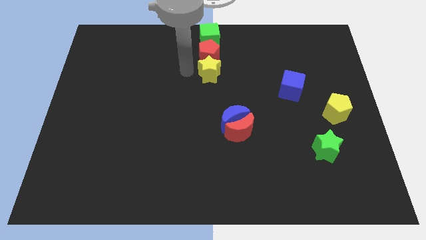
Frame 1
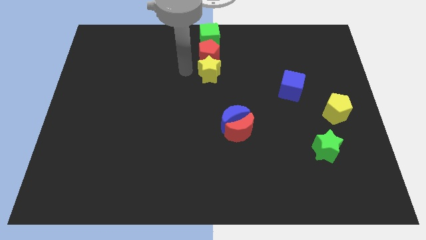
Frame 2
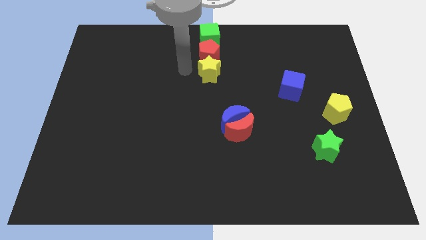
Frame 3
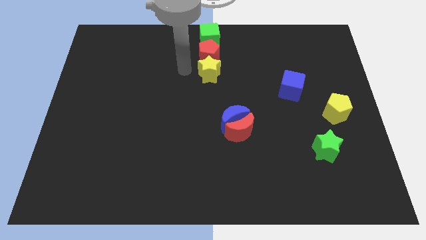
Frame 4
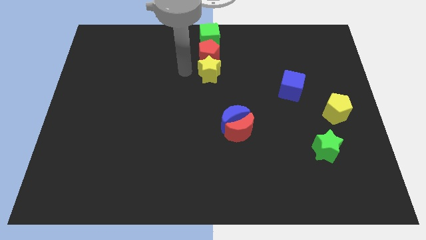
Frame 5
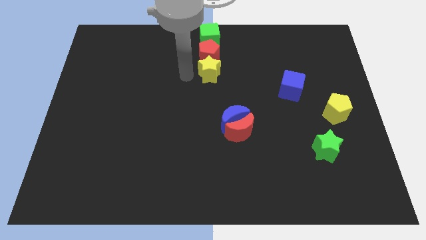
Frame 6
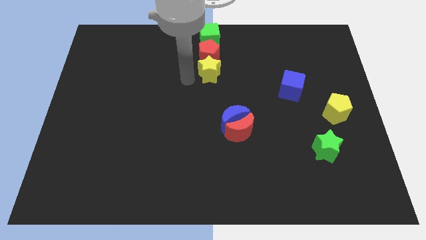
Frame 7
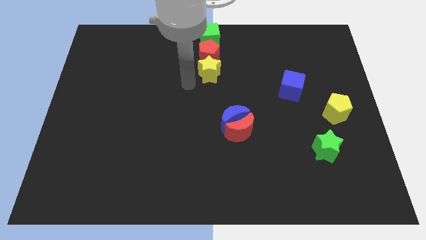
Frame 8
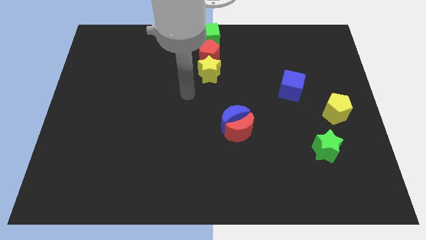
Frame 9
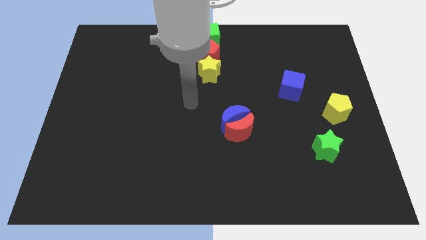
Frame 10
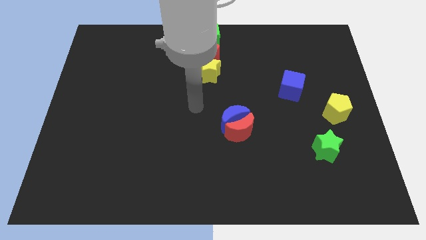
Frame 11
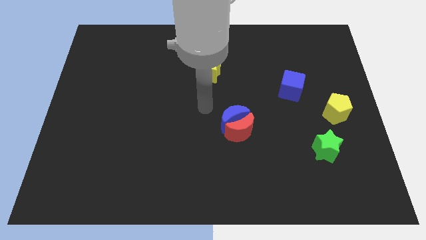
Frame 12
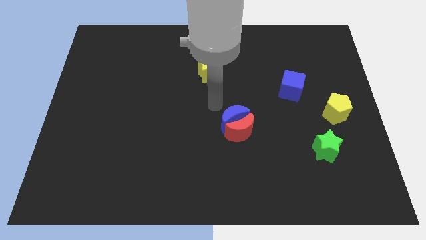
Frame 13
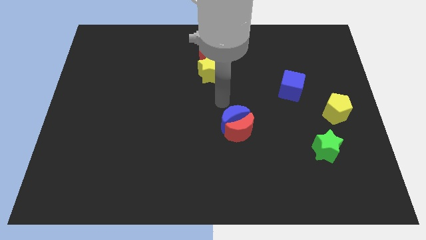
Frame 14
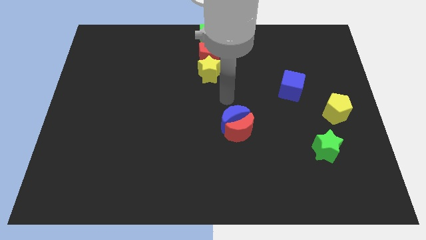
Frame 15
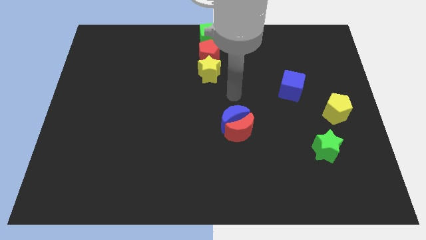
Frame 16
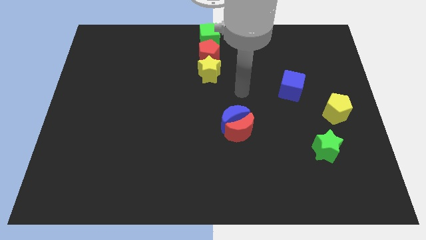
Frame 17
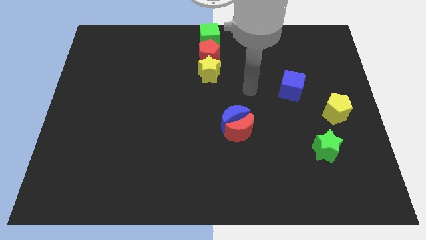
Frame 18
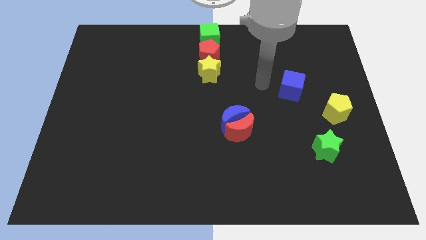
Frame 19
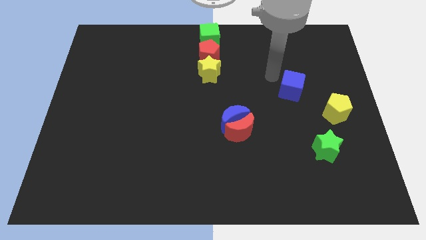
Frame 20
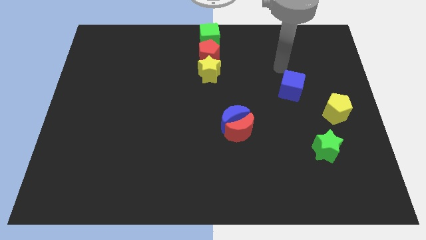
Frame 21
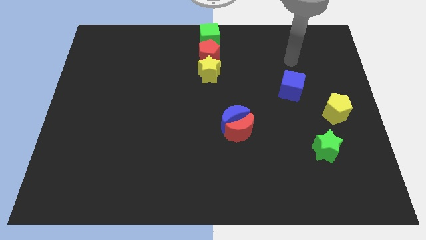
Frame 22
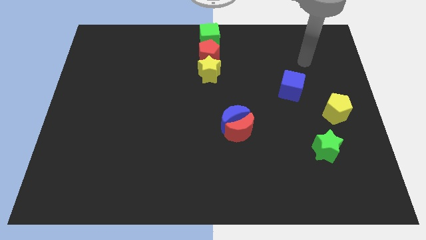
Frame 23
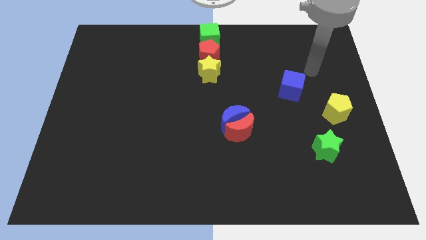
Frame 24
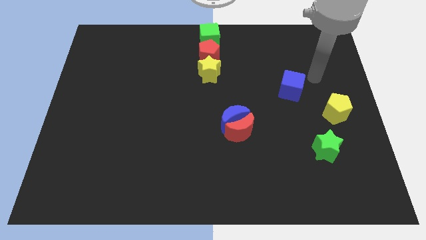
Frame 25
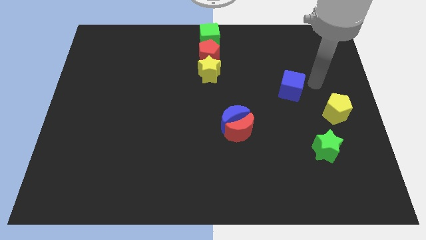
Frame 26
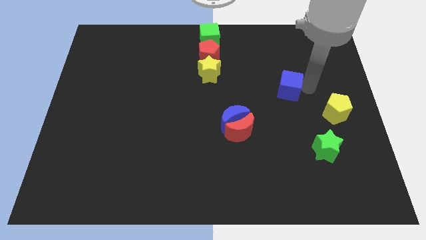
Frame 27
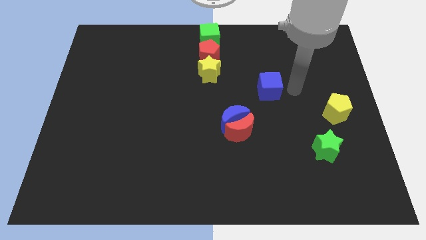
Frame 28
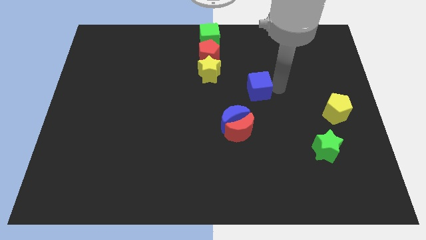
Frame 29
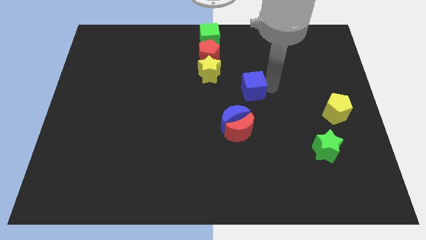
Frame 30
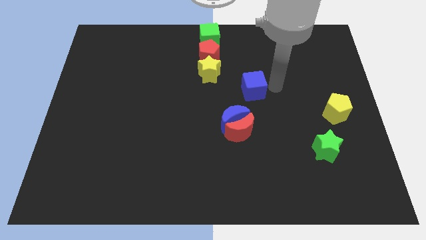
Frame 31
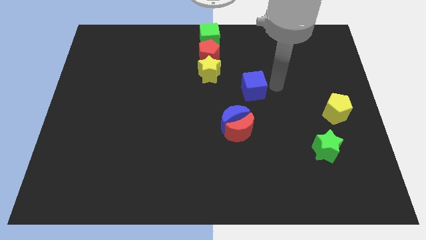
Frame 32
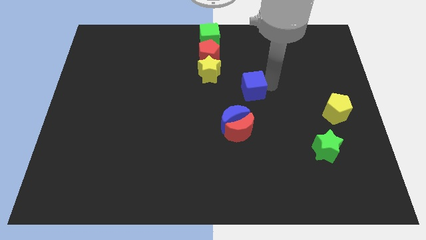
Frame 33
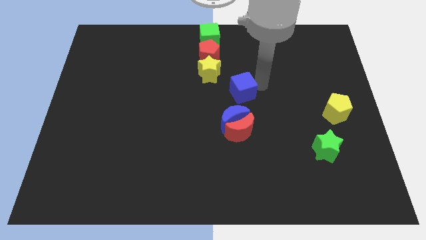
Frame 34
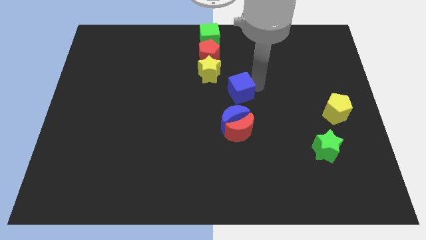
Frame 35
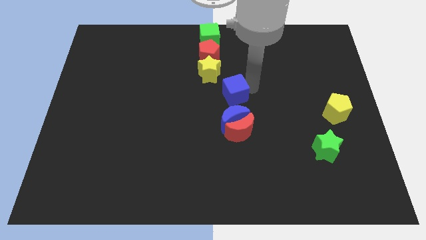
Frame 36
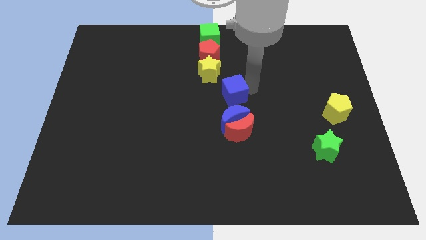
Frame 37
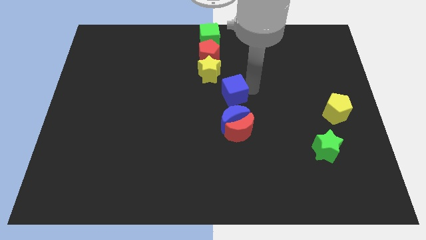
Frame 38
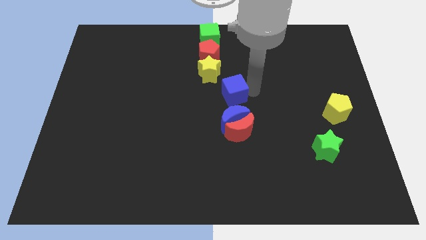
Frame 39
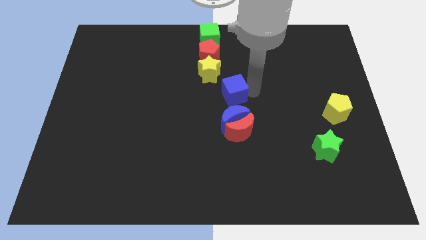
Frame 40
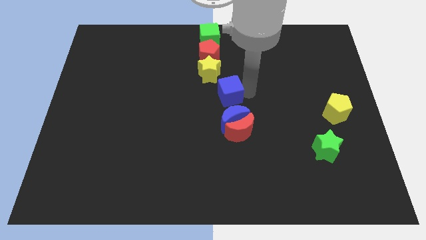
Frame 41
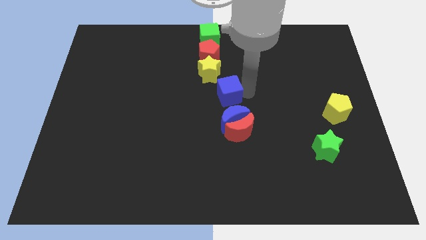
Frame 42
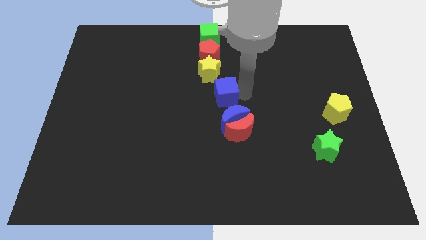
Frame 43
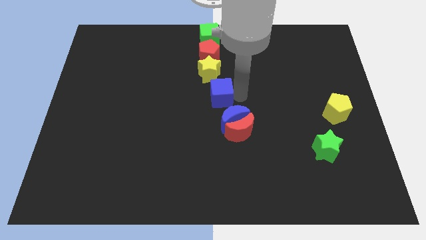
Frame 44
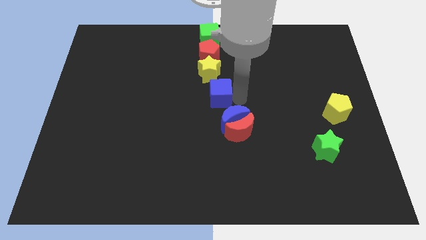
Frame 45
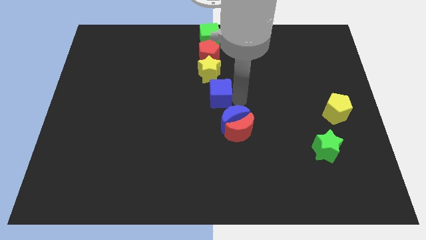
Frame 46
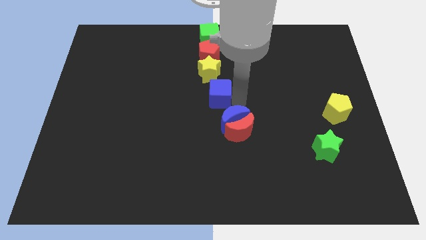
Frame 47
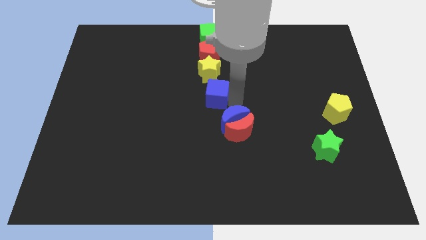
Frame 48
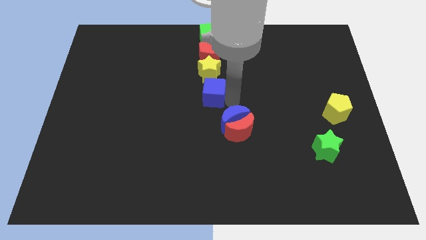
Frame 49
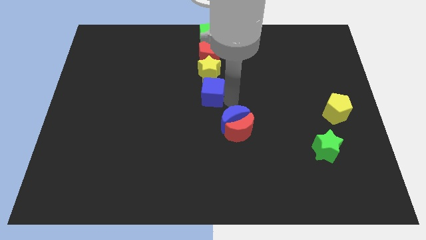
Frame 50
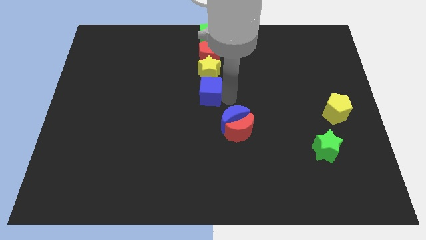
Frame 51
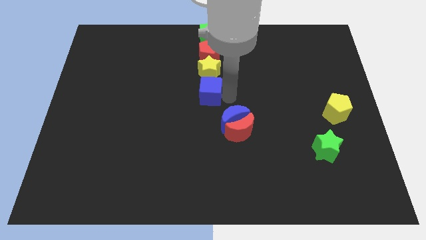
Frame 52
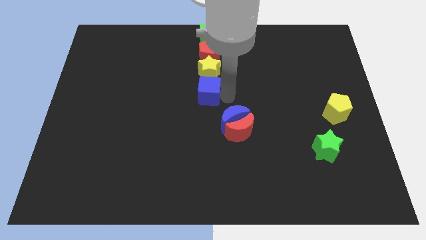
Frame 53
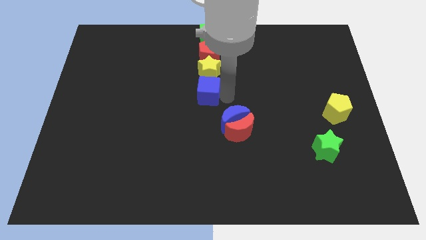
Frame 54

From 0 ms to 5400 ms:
place the blue cube underneath the yellow star

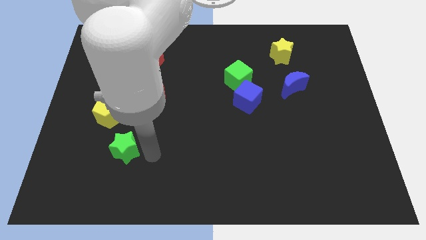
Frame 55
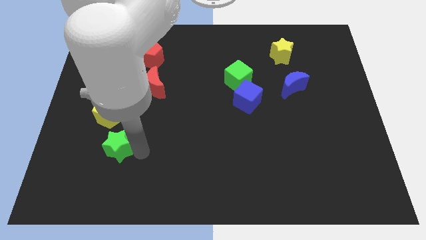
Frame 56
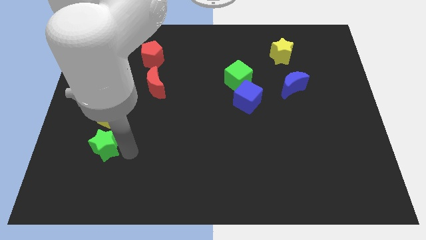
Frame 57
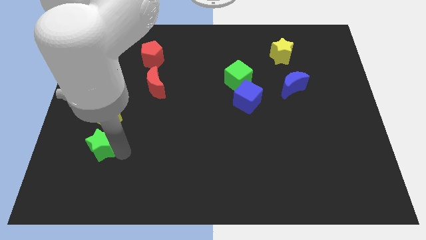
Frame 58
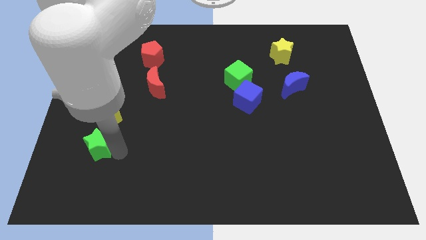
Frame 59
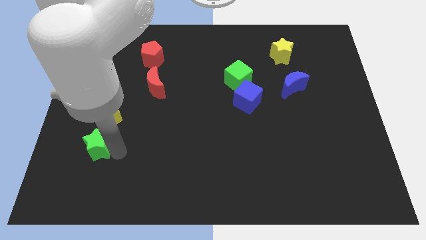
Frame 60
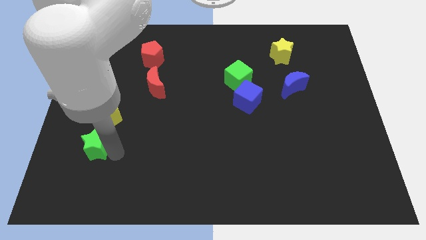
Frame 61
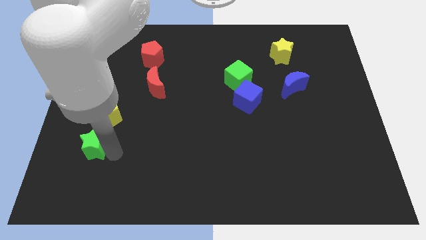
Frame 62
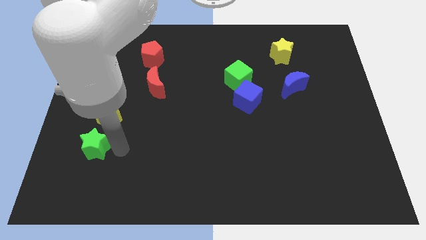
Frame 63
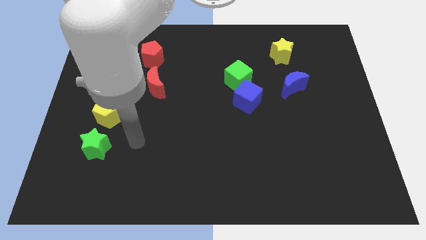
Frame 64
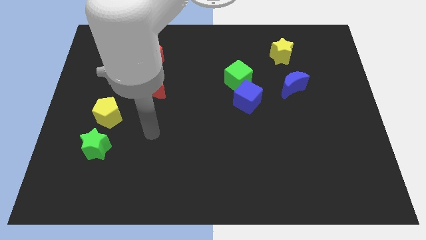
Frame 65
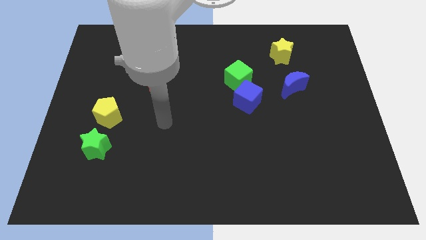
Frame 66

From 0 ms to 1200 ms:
move the green star slightly to the left

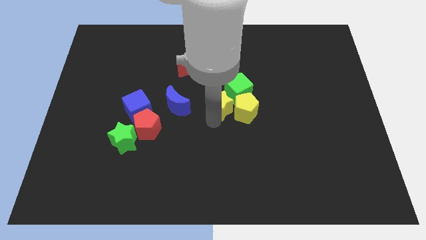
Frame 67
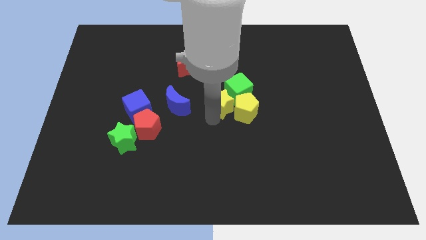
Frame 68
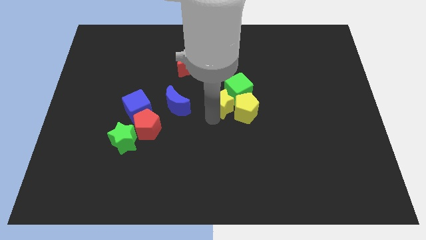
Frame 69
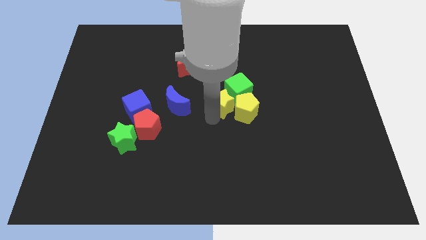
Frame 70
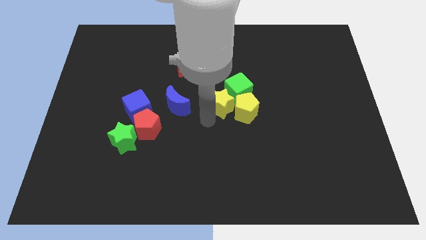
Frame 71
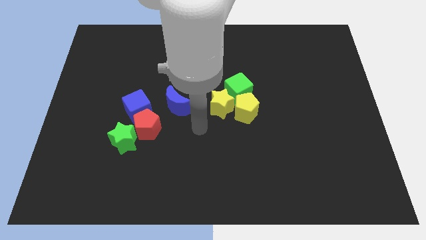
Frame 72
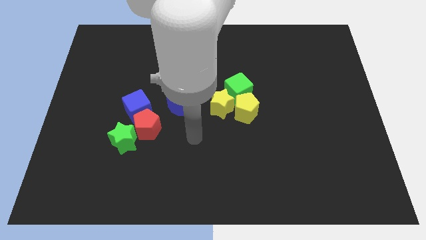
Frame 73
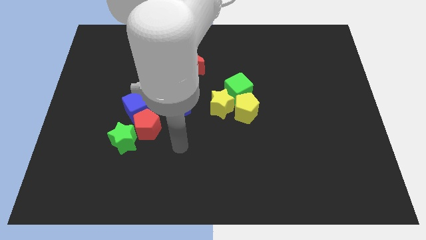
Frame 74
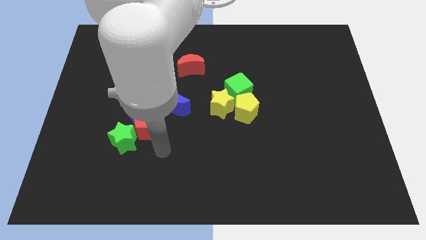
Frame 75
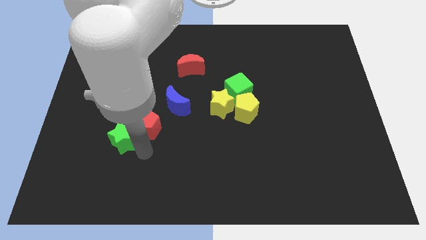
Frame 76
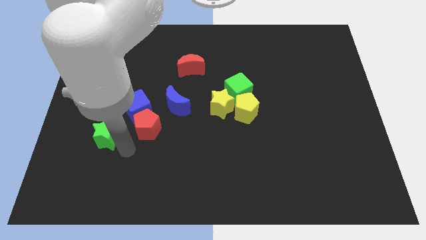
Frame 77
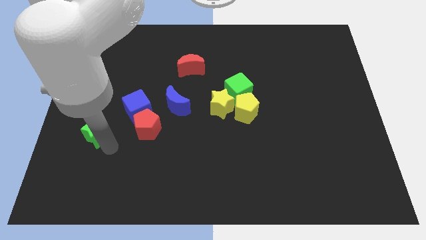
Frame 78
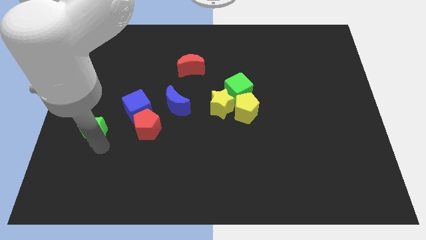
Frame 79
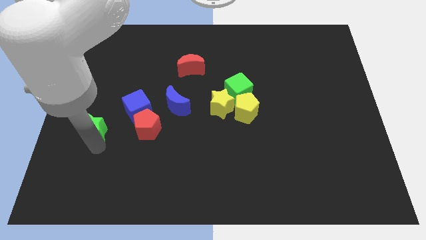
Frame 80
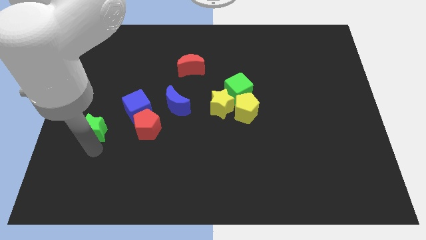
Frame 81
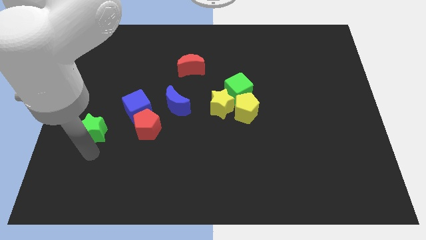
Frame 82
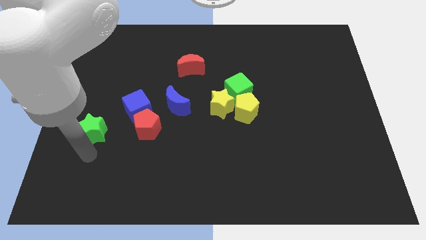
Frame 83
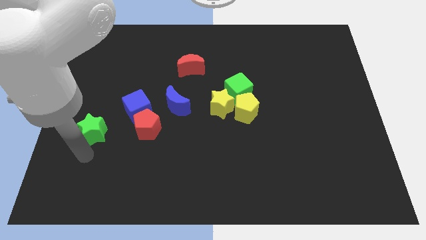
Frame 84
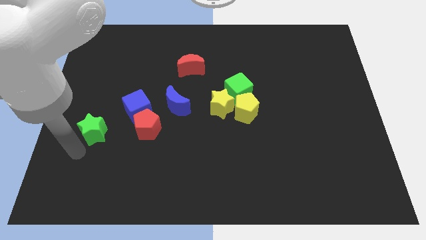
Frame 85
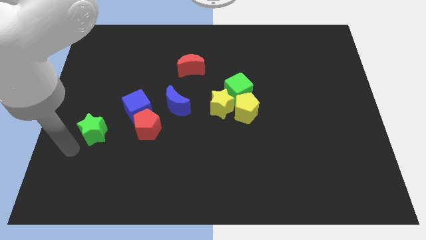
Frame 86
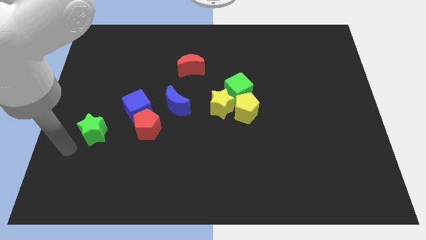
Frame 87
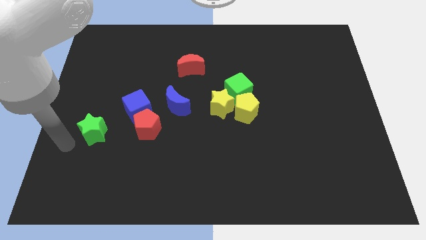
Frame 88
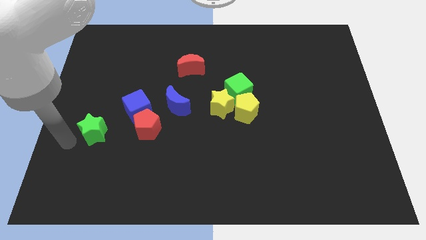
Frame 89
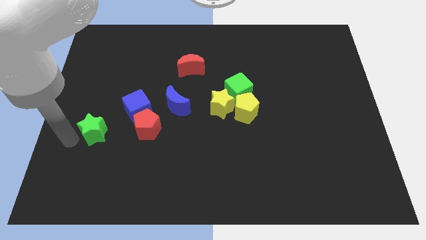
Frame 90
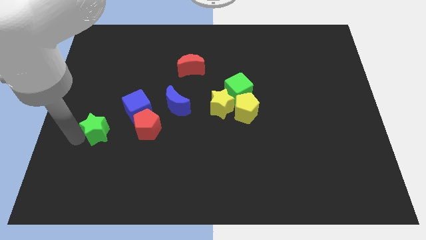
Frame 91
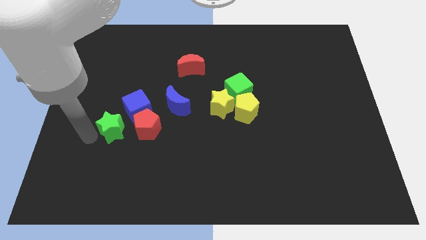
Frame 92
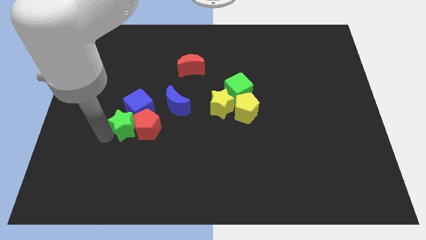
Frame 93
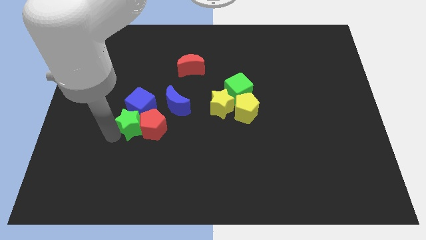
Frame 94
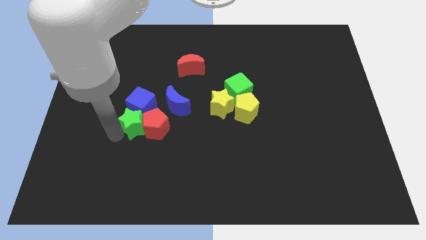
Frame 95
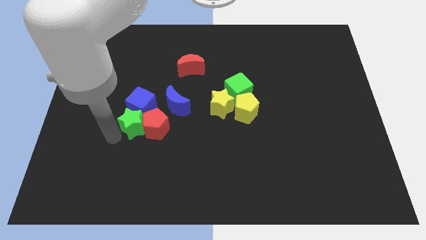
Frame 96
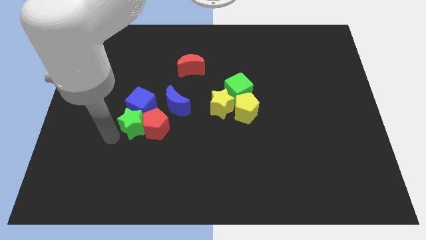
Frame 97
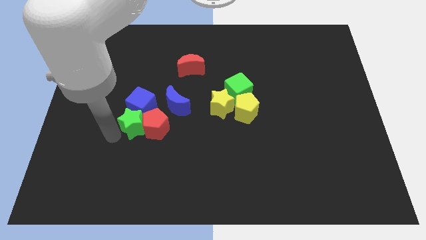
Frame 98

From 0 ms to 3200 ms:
push the green star into the left side of the red pentagon
